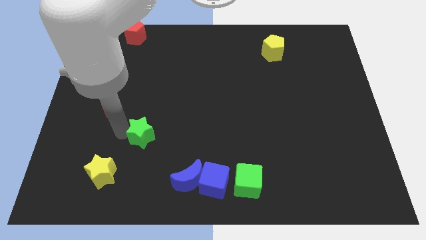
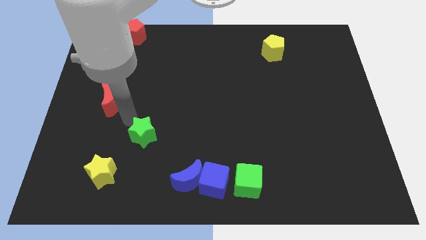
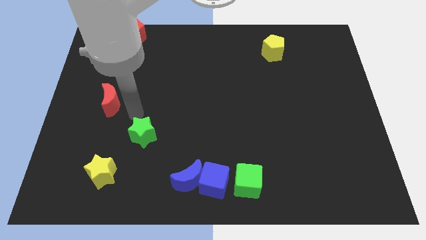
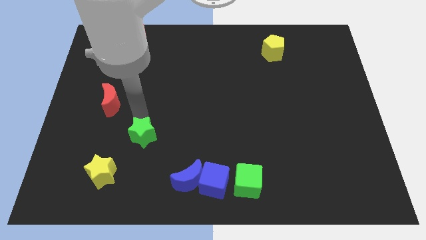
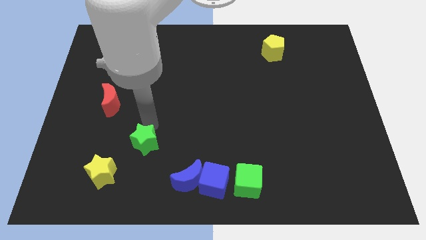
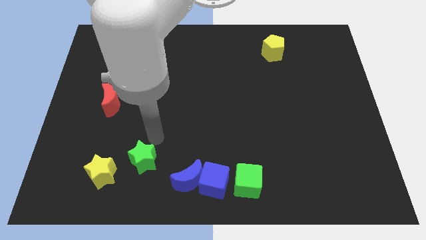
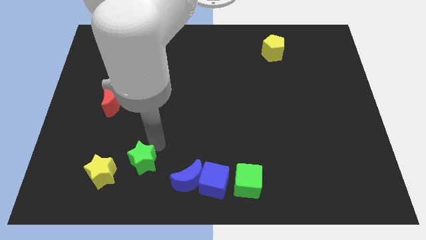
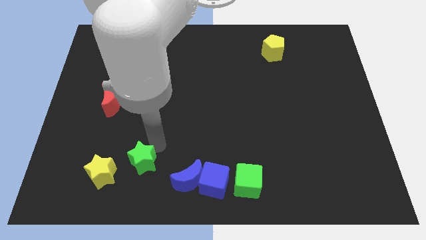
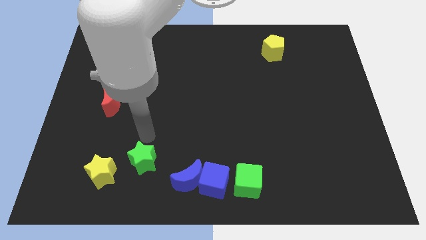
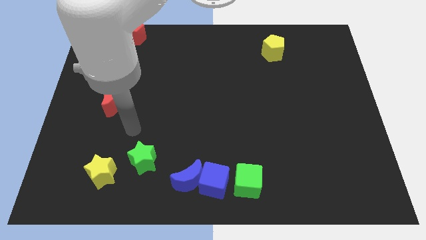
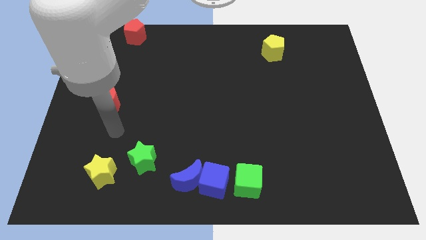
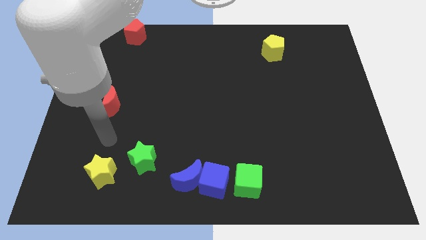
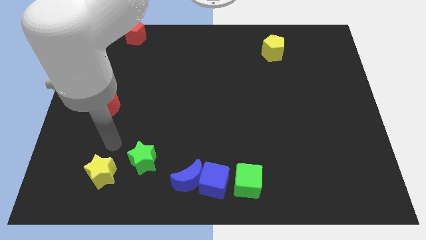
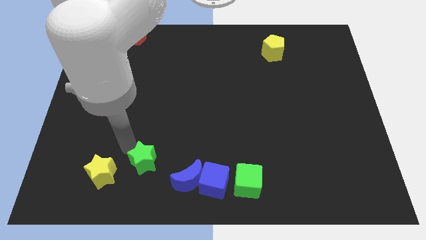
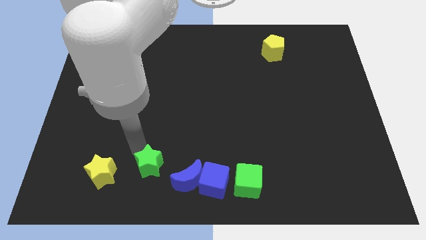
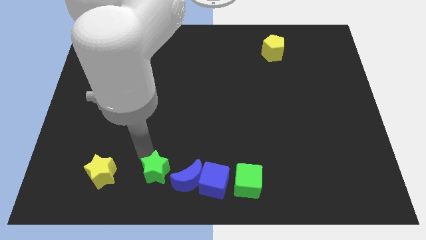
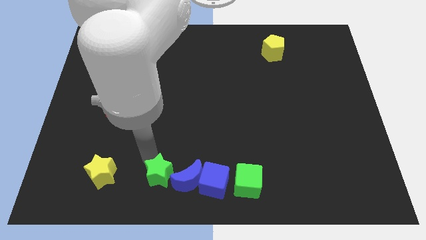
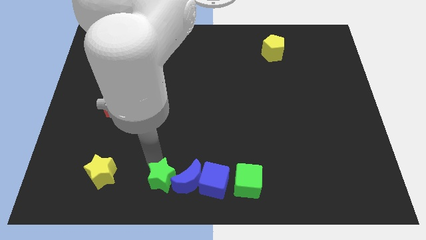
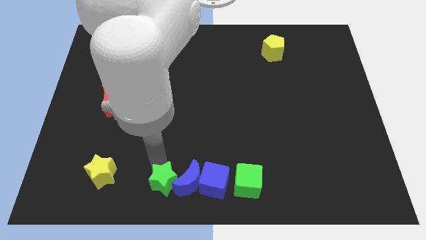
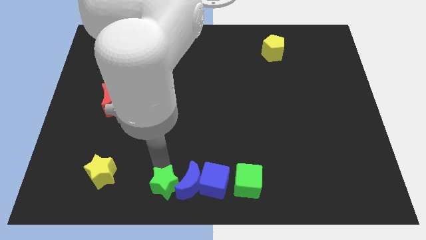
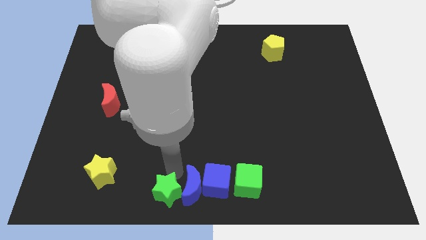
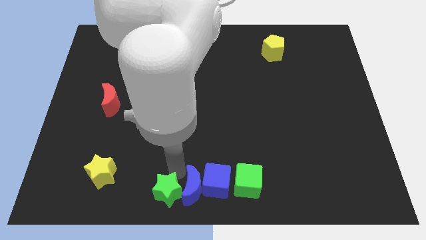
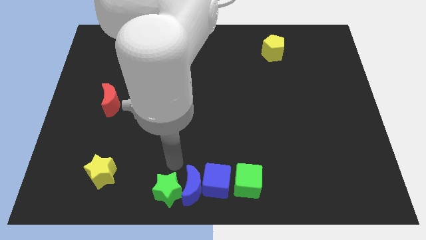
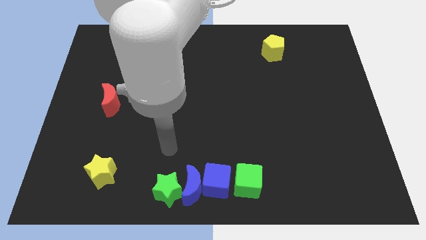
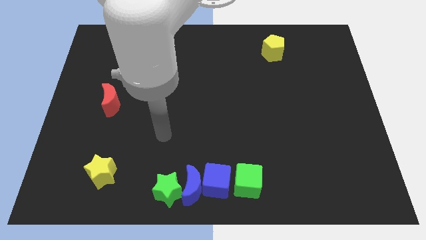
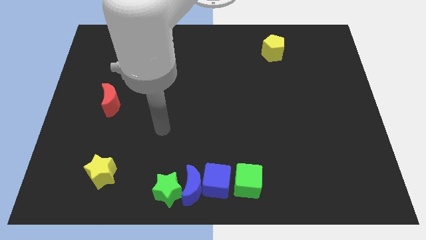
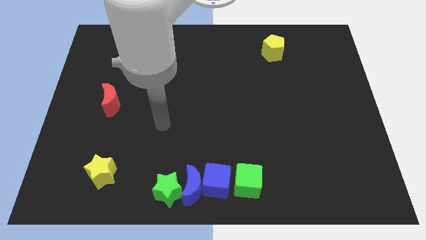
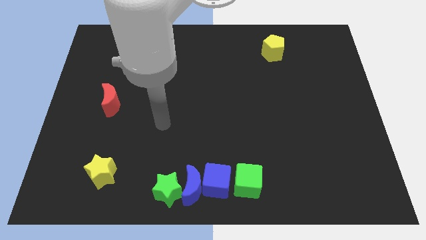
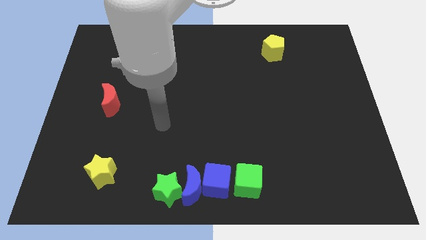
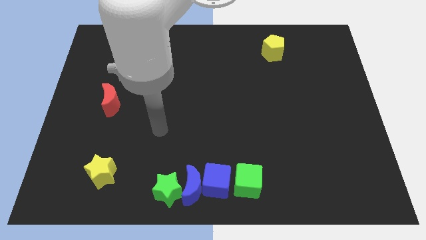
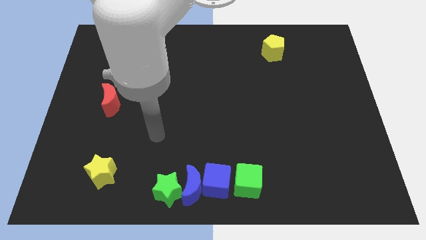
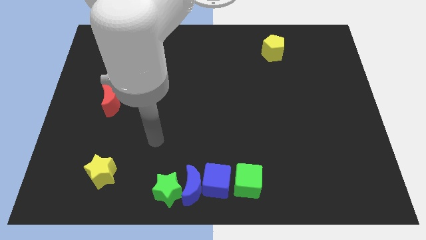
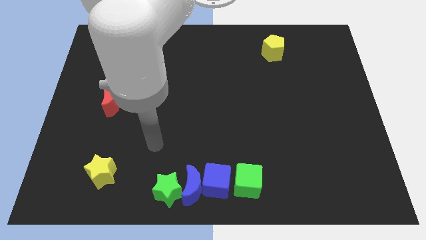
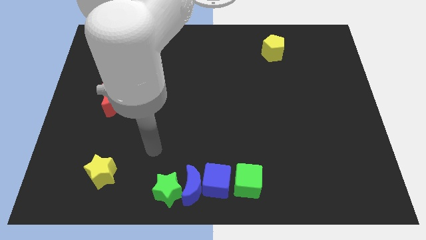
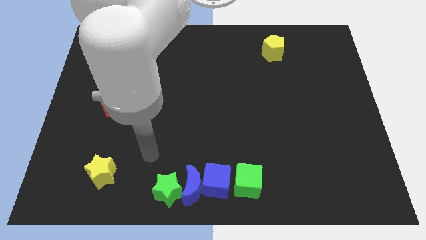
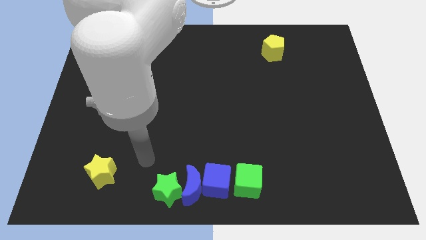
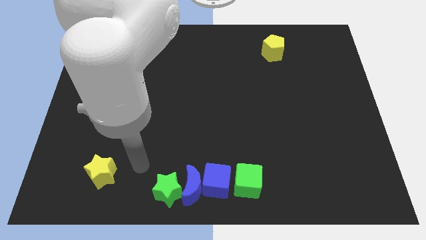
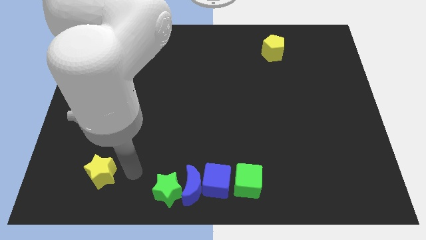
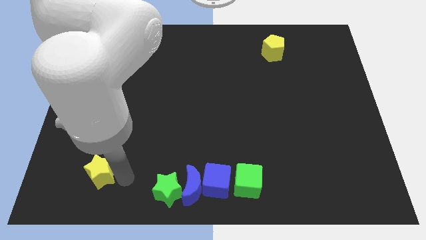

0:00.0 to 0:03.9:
place the green star parallel left to the blue moon

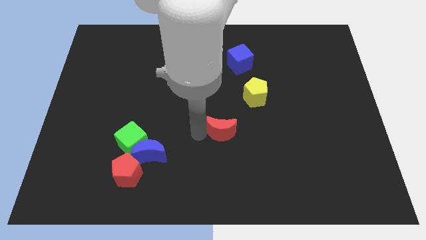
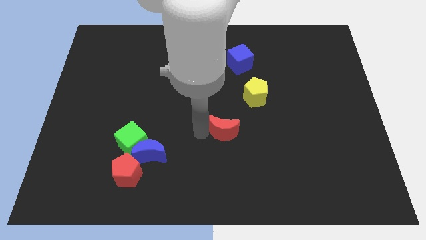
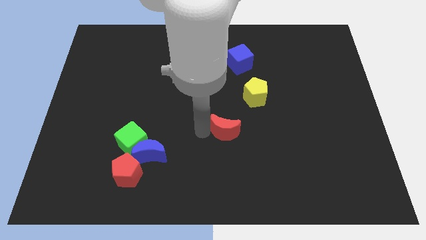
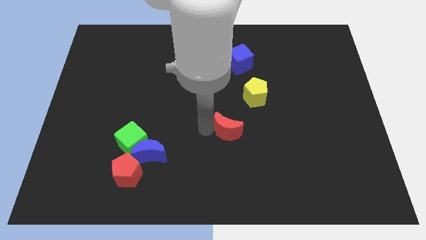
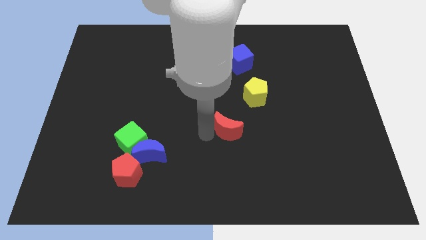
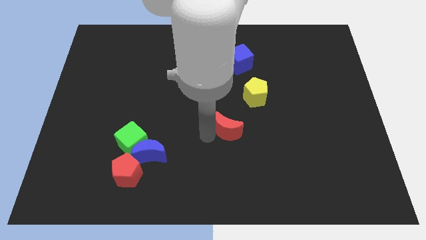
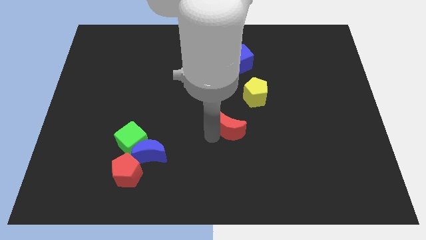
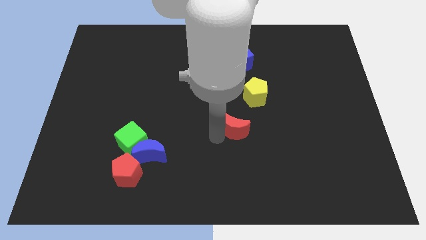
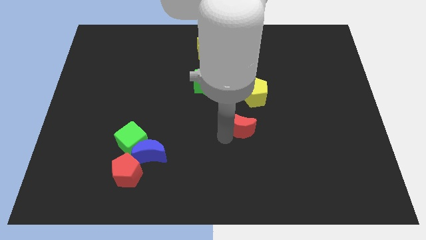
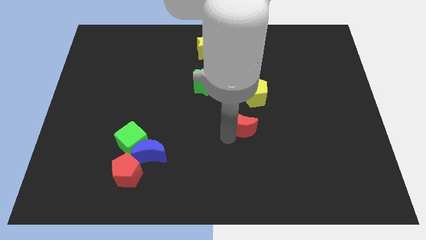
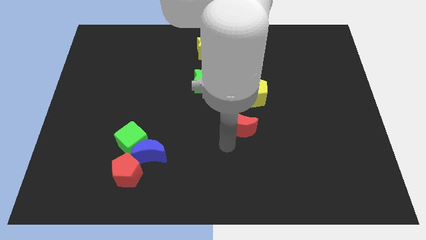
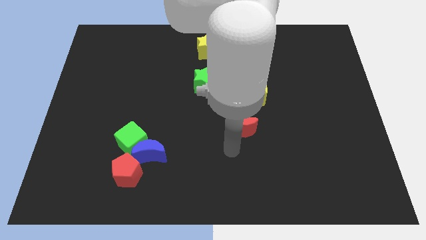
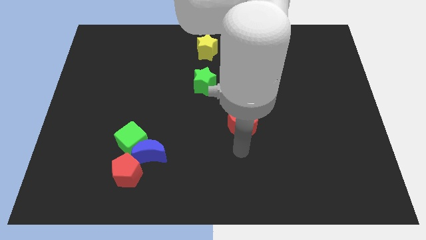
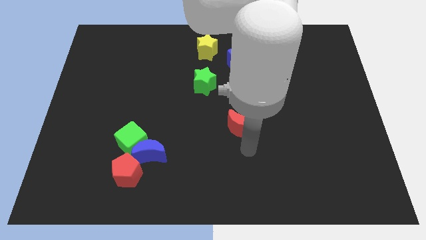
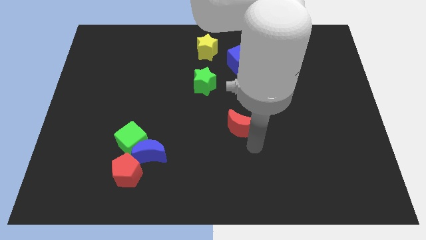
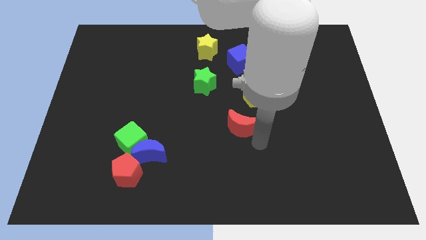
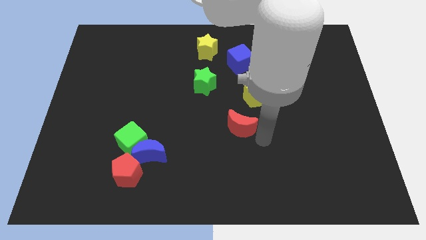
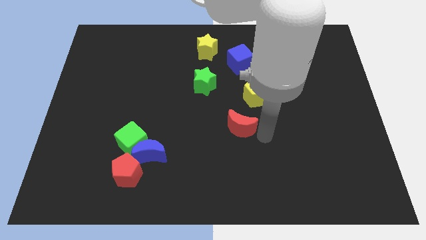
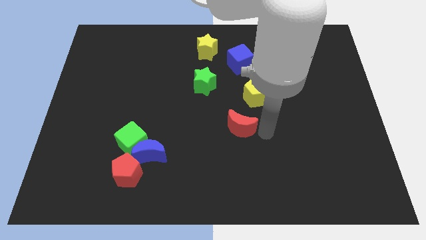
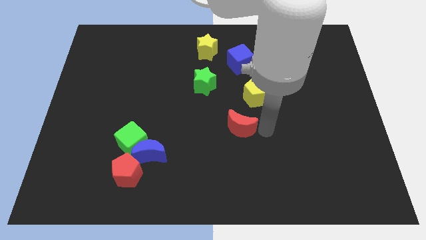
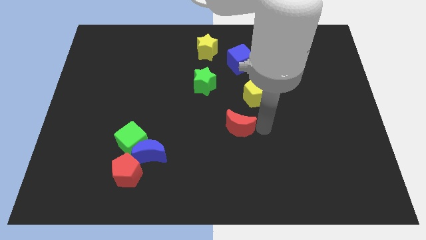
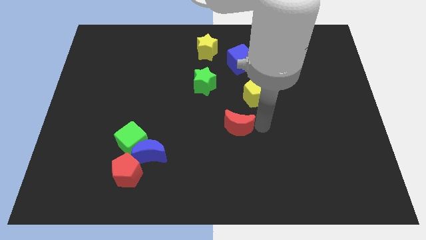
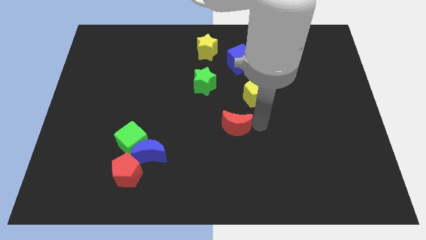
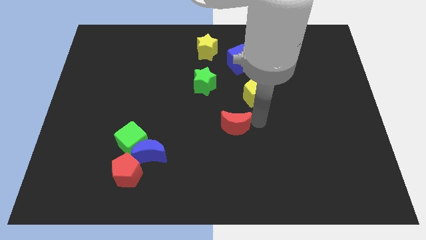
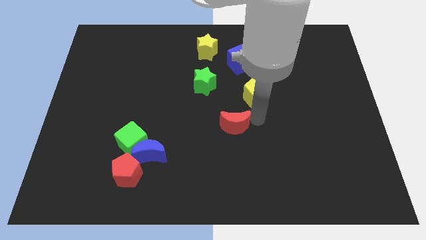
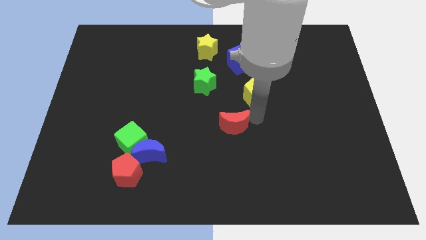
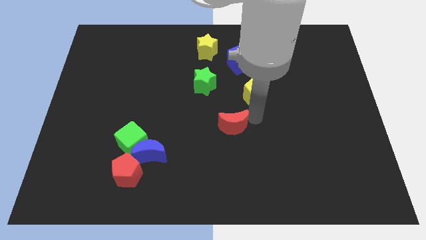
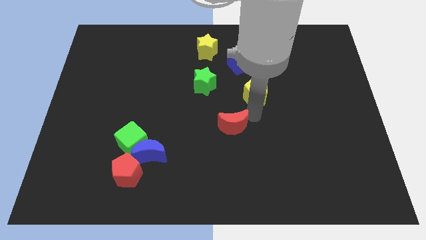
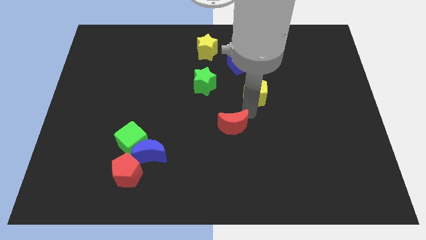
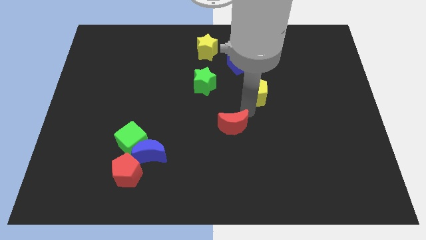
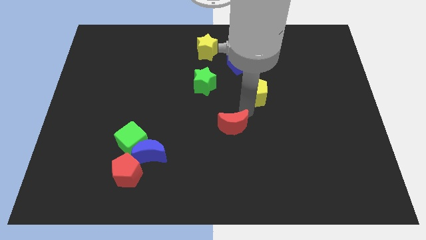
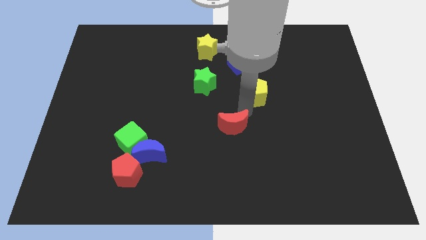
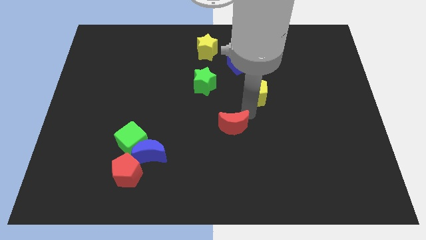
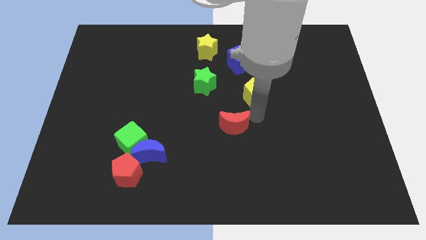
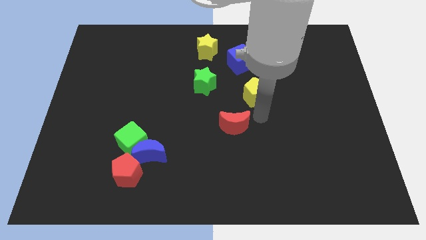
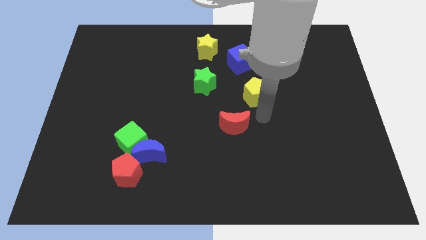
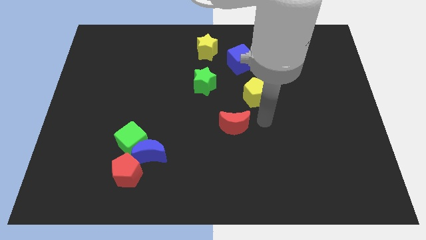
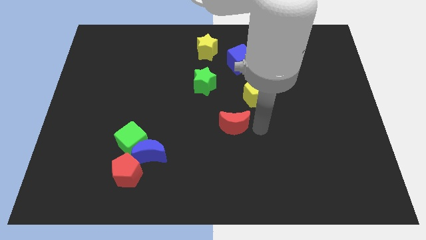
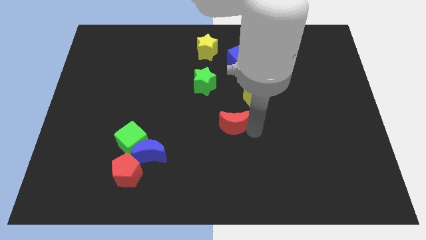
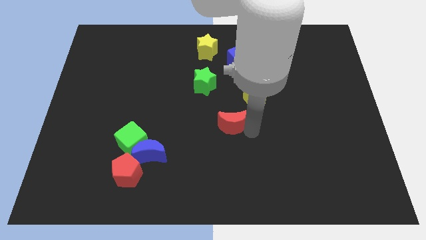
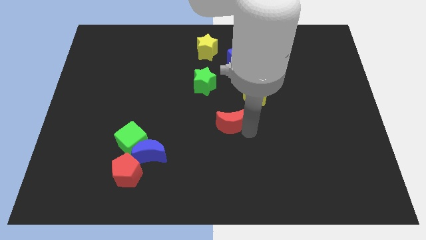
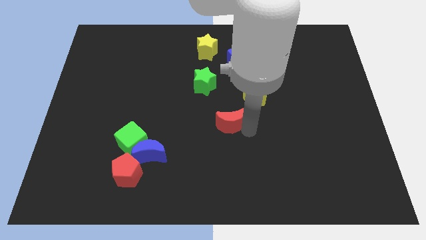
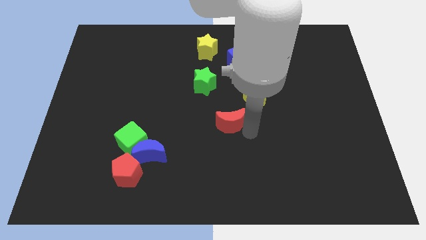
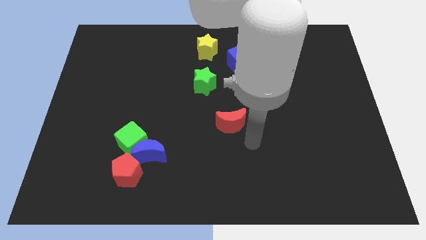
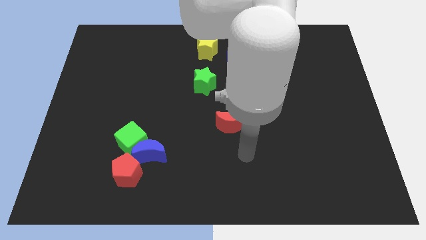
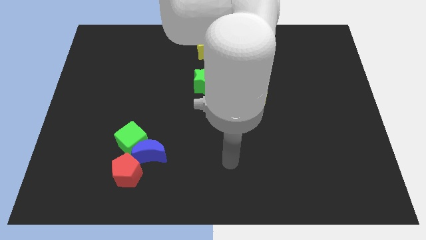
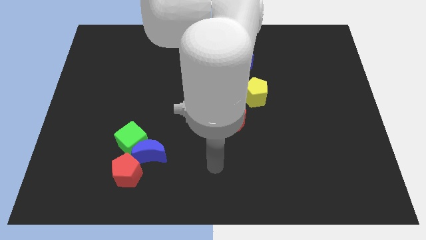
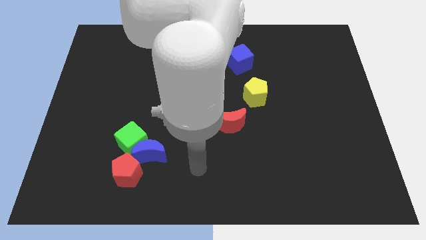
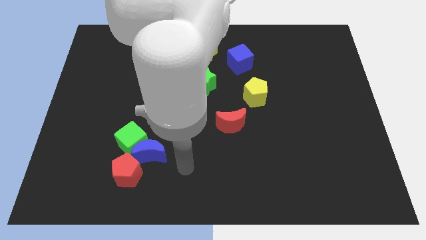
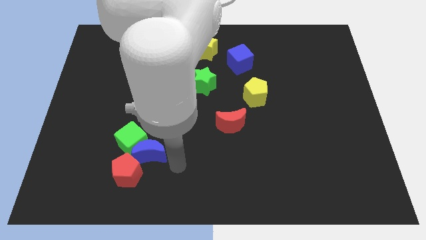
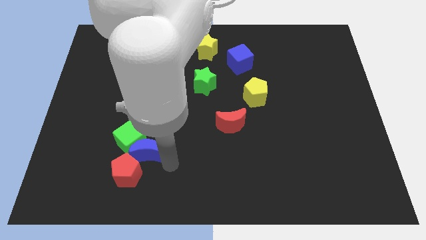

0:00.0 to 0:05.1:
place your arm below the blue crescent
